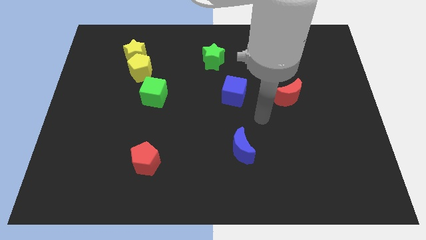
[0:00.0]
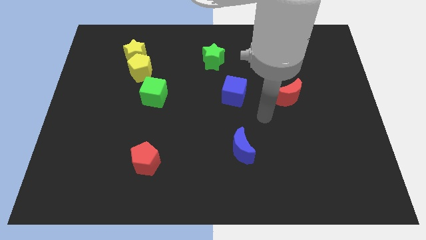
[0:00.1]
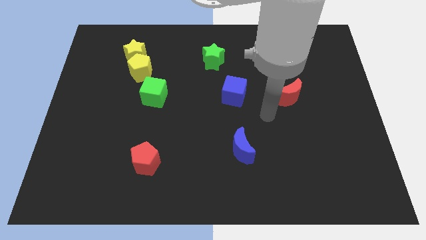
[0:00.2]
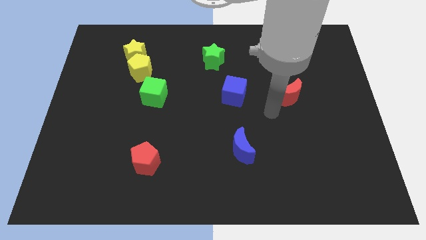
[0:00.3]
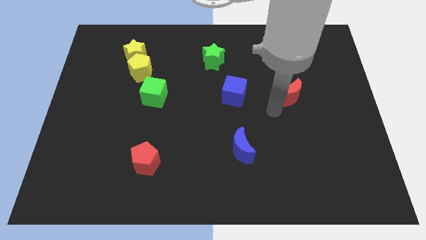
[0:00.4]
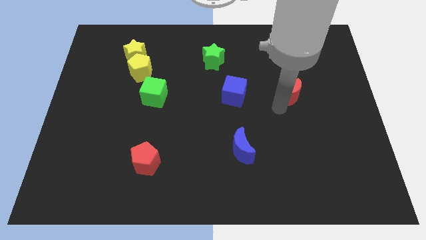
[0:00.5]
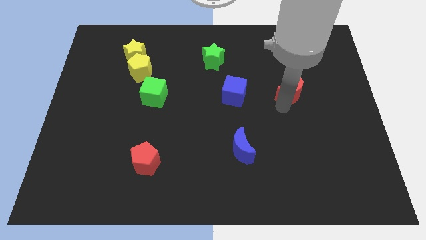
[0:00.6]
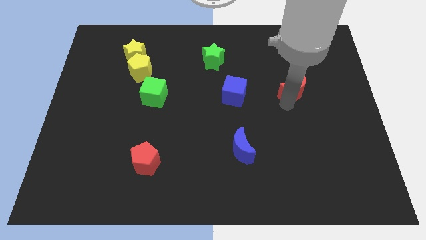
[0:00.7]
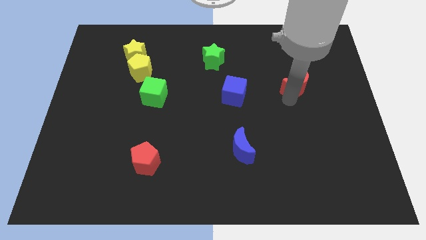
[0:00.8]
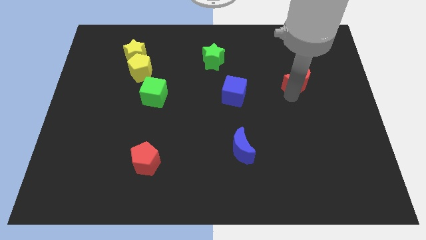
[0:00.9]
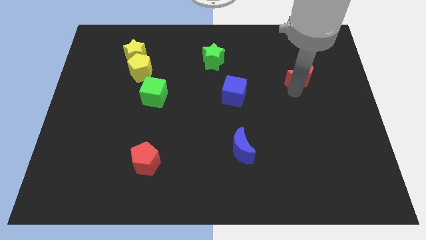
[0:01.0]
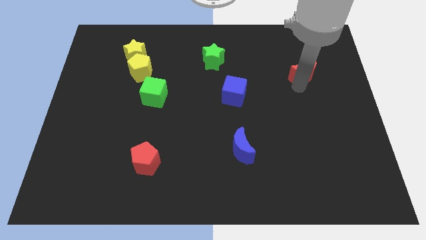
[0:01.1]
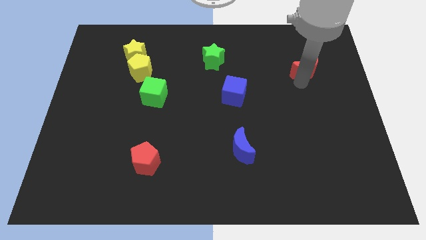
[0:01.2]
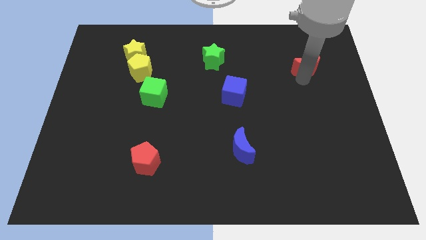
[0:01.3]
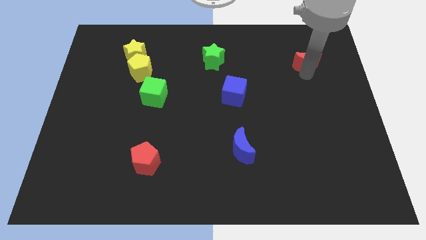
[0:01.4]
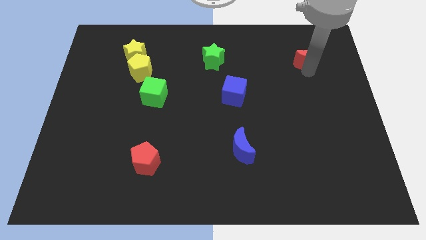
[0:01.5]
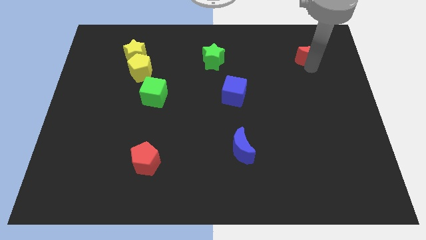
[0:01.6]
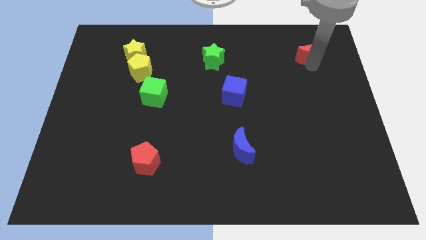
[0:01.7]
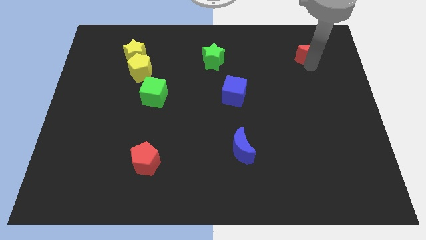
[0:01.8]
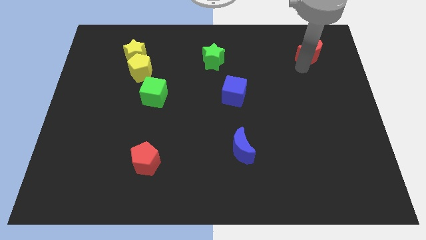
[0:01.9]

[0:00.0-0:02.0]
push the red crescent toward the right of the green star

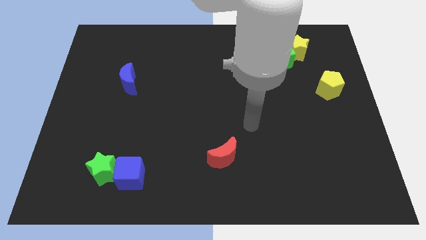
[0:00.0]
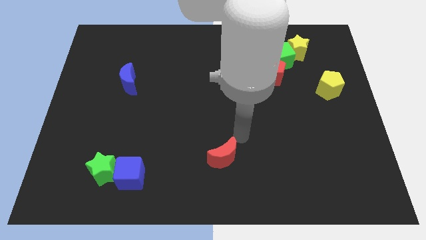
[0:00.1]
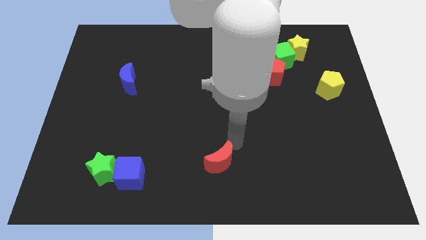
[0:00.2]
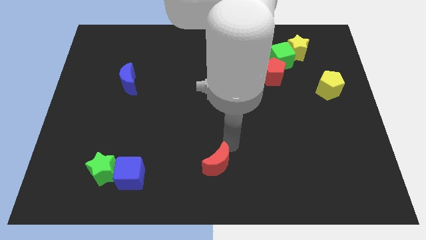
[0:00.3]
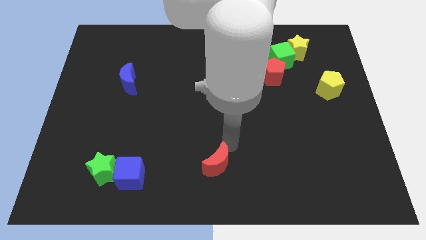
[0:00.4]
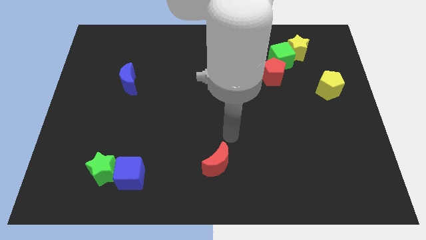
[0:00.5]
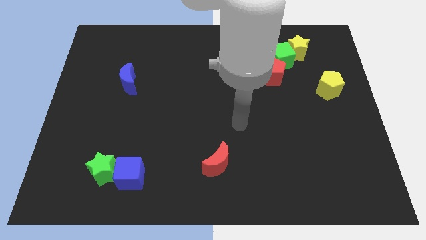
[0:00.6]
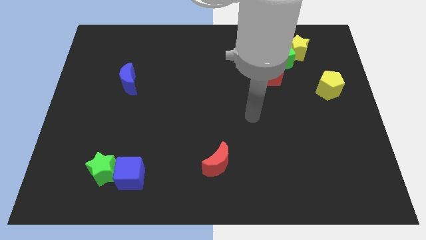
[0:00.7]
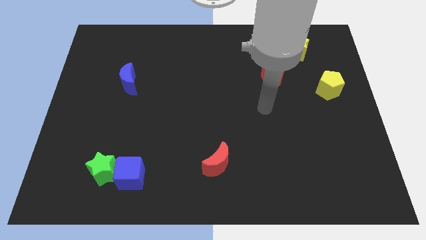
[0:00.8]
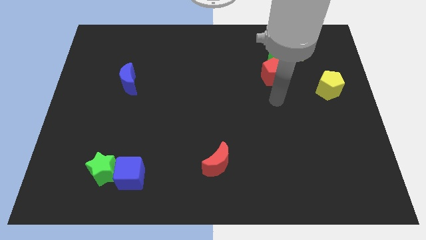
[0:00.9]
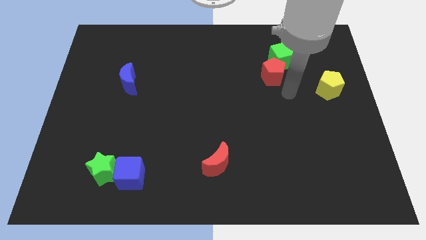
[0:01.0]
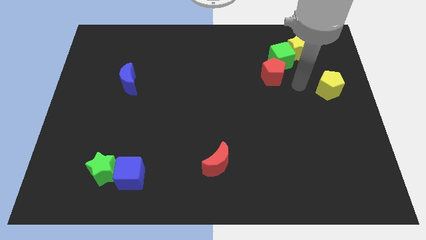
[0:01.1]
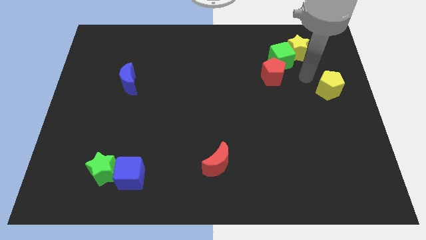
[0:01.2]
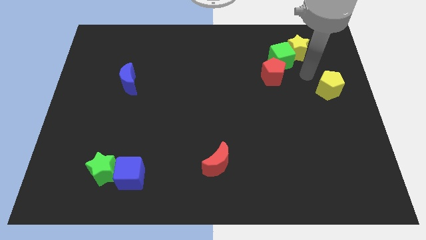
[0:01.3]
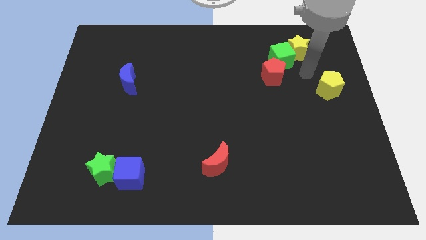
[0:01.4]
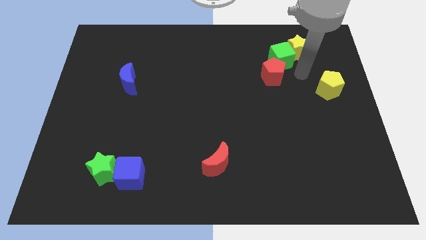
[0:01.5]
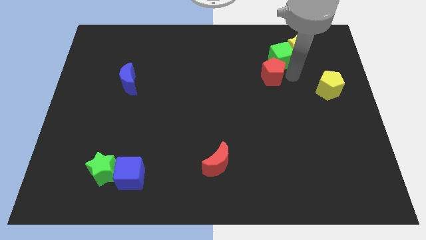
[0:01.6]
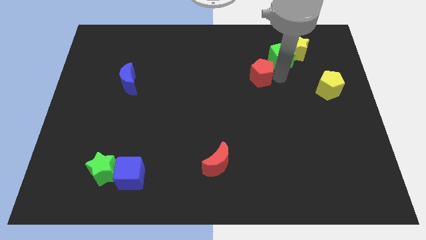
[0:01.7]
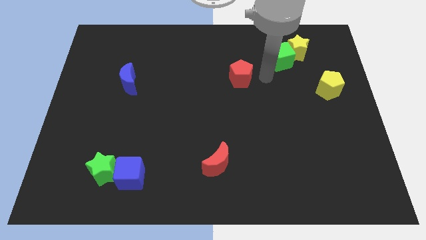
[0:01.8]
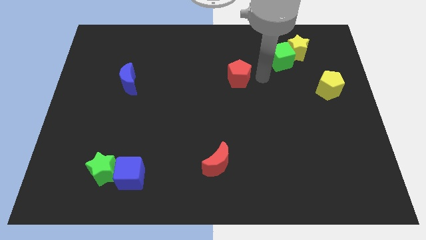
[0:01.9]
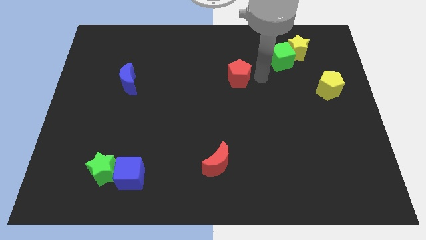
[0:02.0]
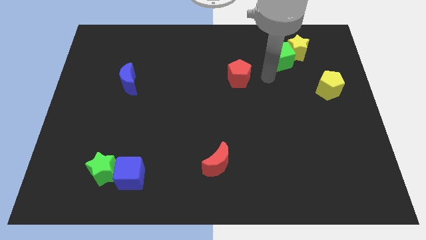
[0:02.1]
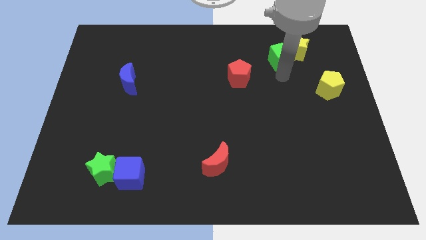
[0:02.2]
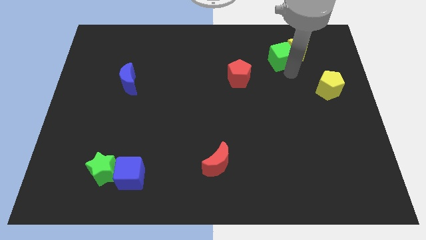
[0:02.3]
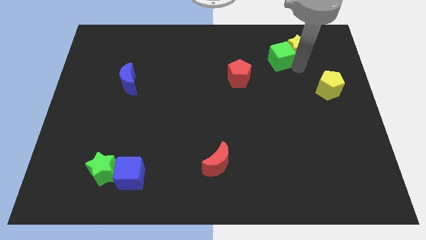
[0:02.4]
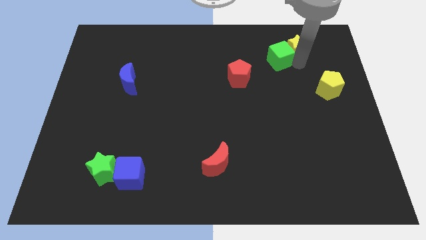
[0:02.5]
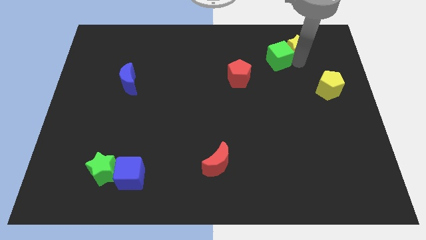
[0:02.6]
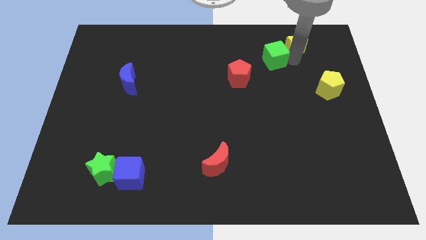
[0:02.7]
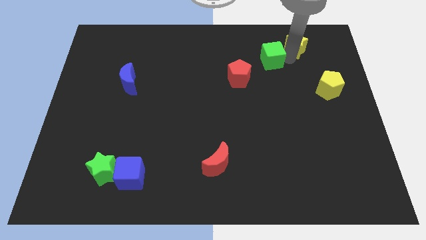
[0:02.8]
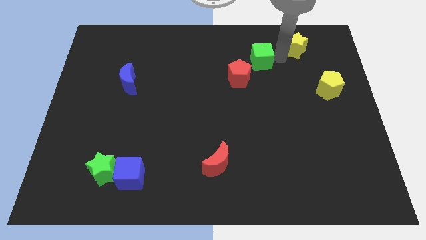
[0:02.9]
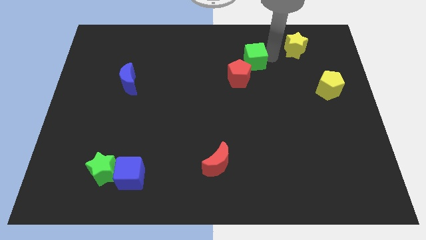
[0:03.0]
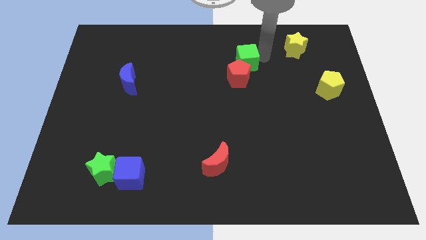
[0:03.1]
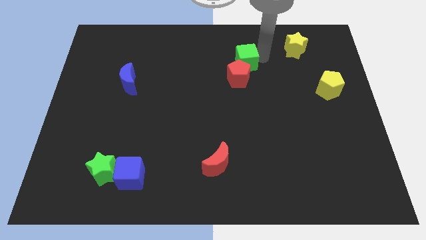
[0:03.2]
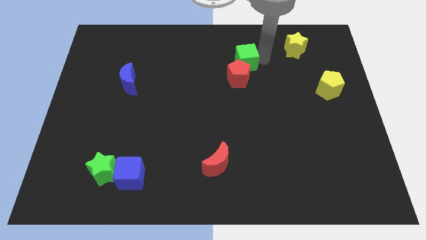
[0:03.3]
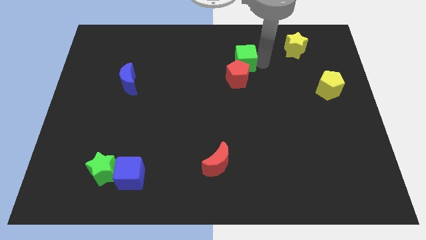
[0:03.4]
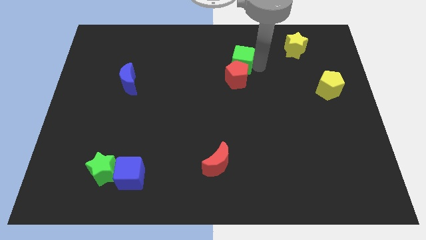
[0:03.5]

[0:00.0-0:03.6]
push red moonred pentagon and green cube slightly to left side

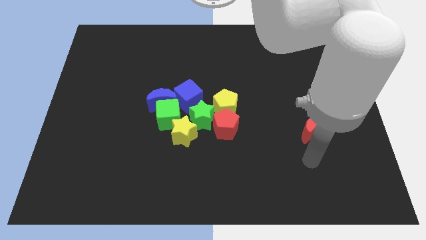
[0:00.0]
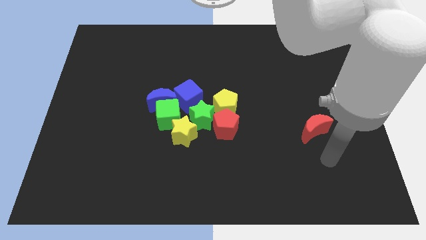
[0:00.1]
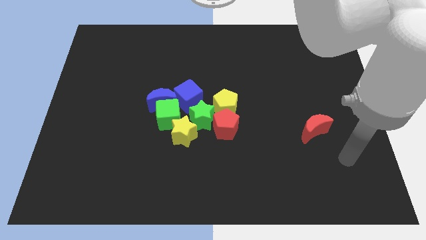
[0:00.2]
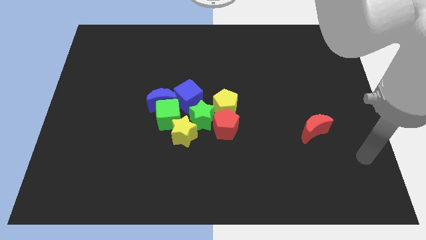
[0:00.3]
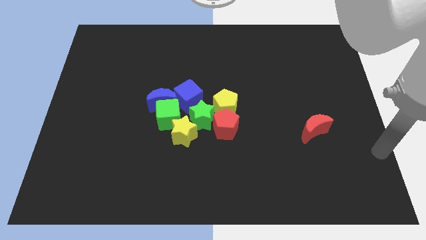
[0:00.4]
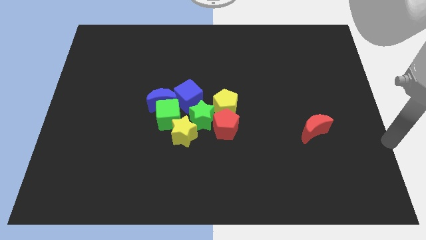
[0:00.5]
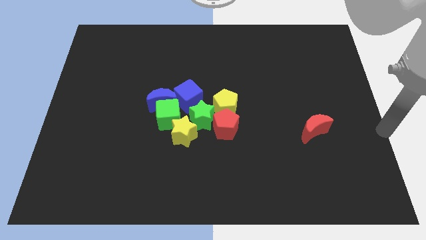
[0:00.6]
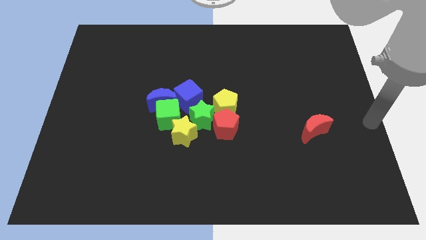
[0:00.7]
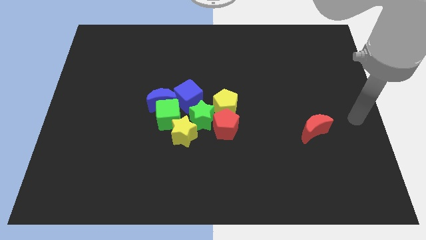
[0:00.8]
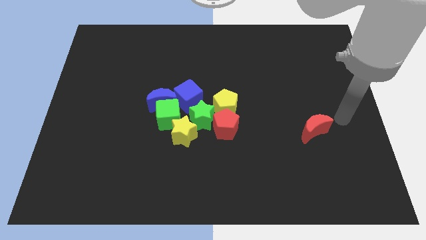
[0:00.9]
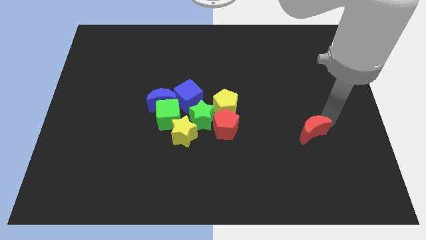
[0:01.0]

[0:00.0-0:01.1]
move your arm to the top of red crescent

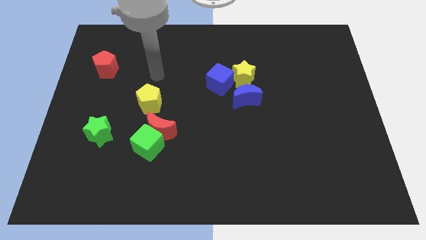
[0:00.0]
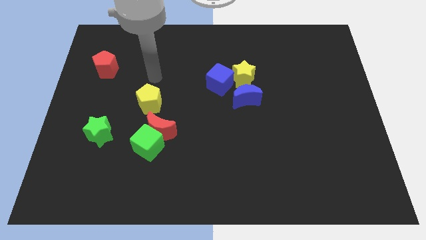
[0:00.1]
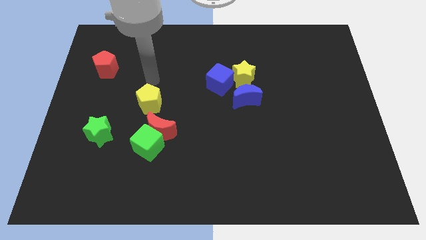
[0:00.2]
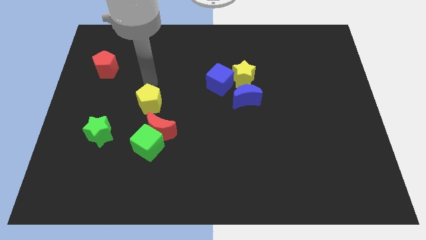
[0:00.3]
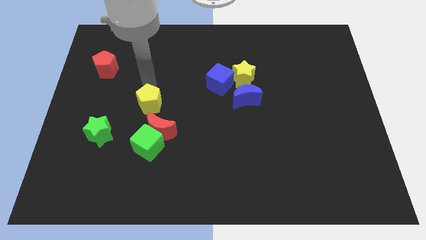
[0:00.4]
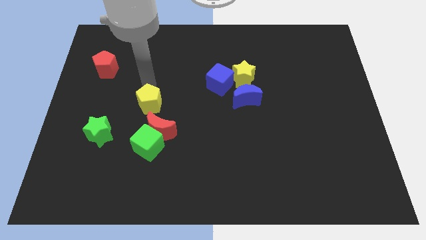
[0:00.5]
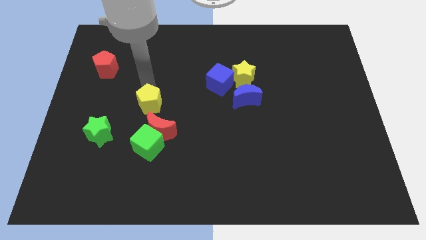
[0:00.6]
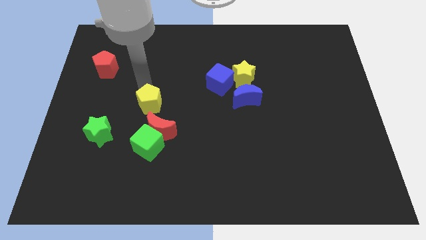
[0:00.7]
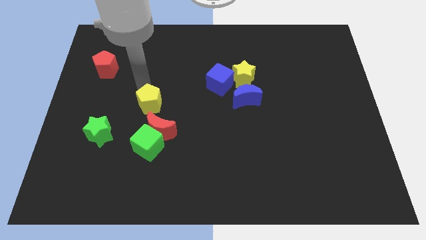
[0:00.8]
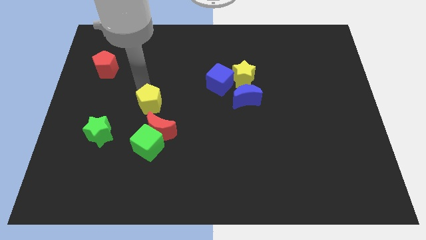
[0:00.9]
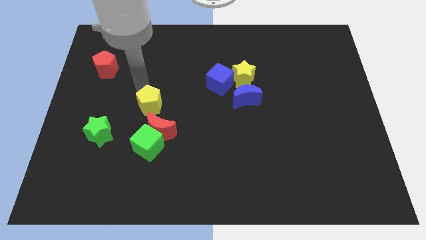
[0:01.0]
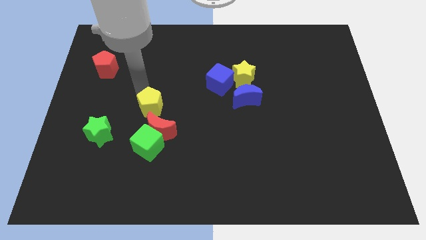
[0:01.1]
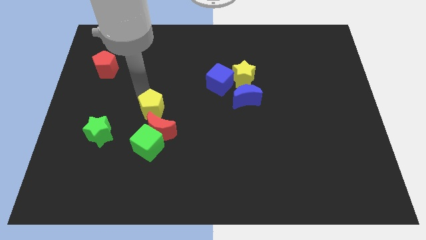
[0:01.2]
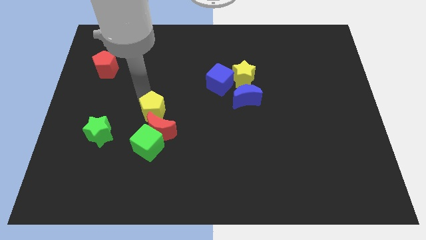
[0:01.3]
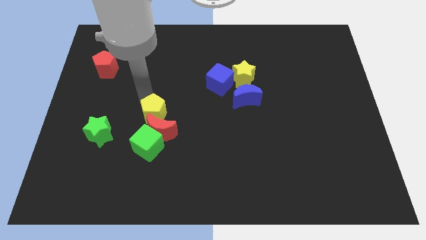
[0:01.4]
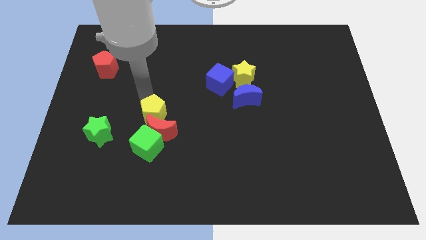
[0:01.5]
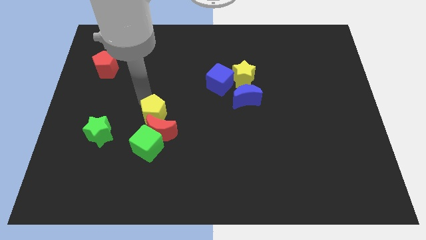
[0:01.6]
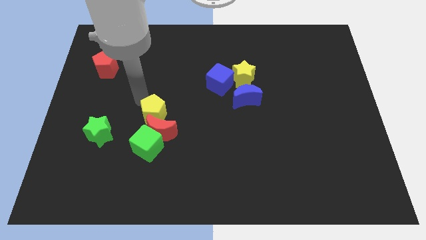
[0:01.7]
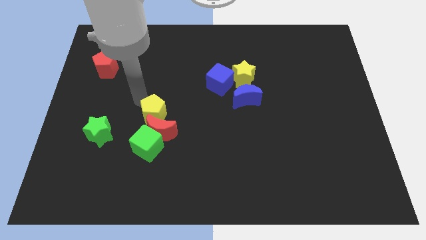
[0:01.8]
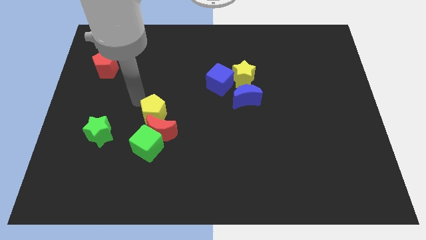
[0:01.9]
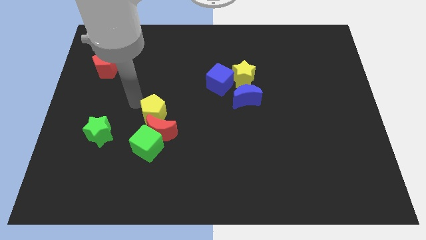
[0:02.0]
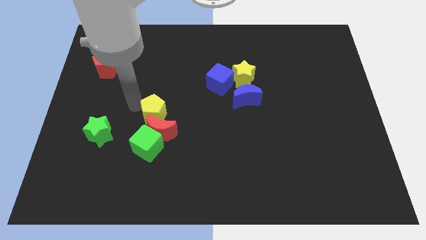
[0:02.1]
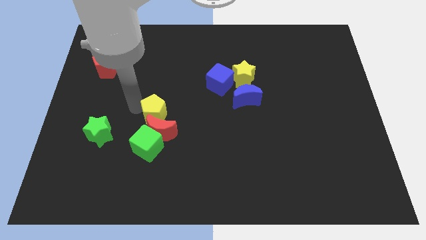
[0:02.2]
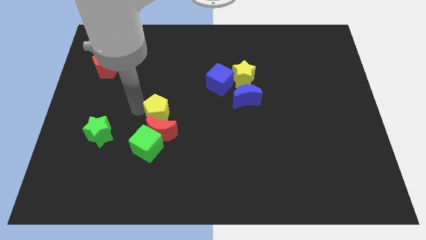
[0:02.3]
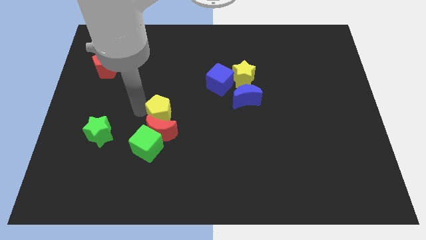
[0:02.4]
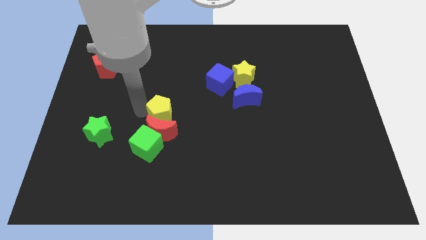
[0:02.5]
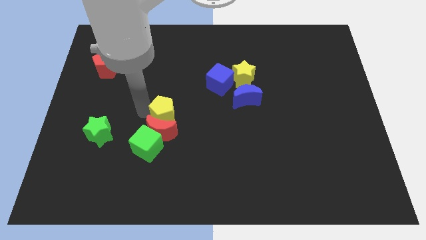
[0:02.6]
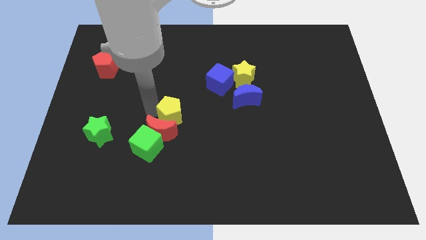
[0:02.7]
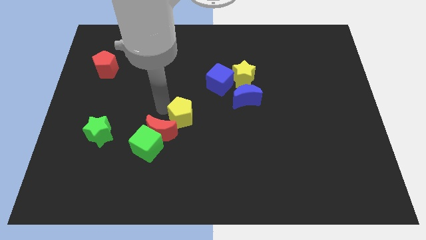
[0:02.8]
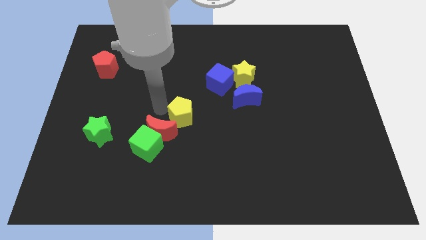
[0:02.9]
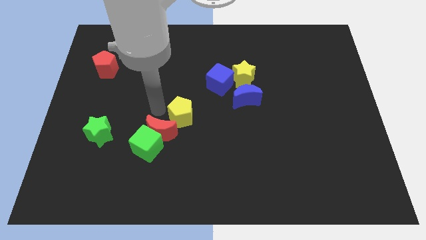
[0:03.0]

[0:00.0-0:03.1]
place the yellow pentagon in between the blue cube and red moon
